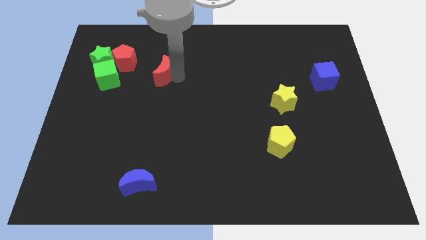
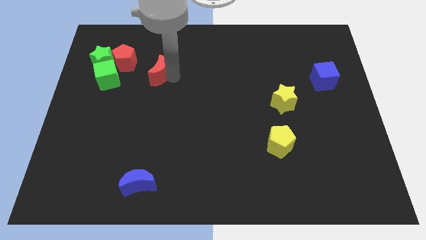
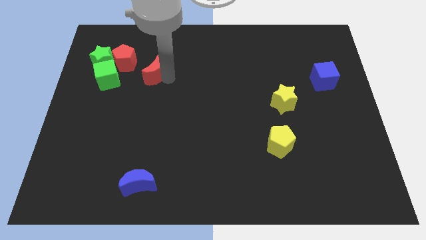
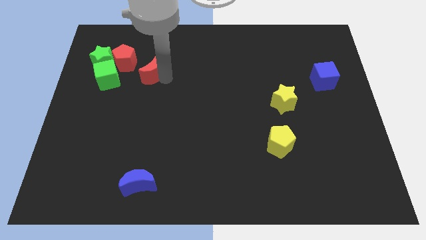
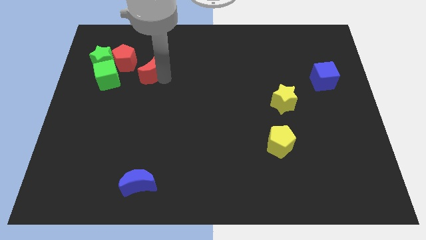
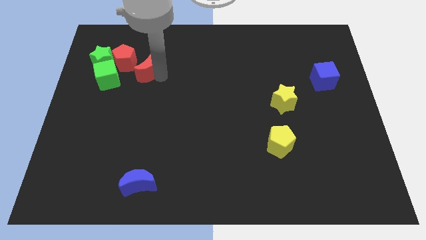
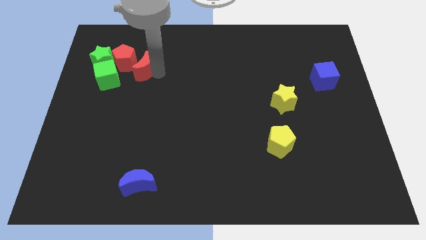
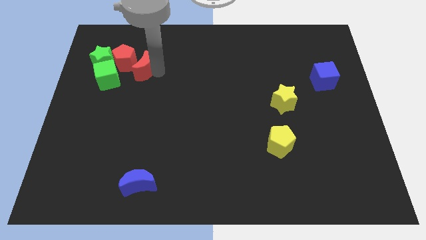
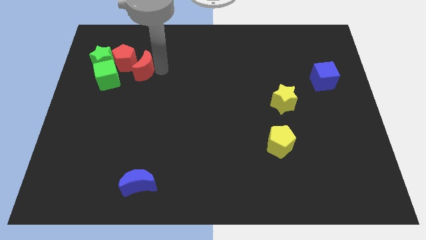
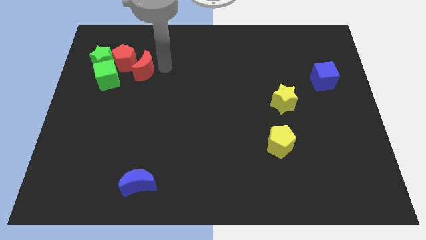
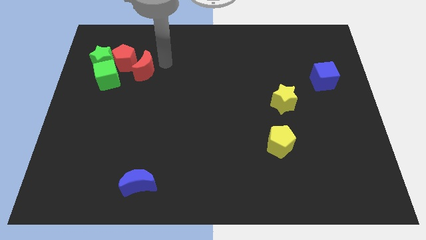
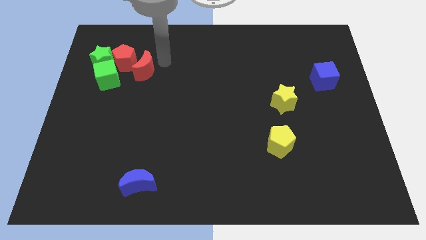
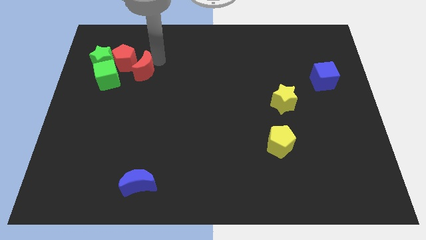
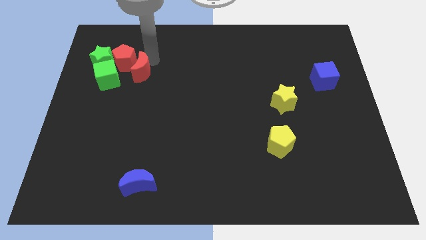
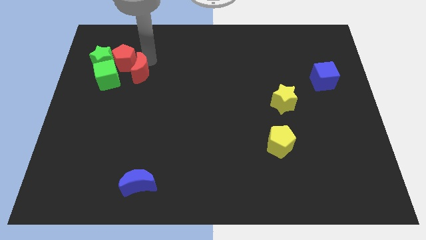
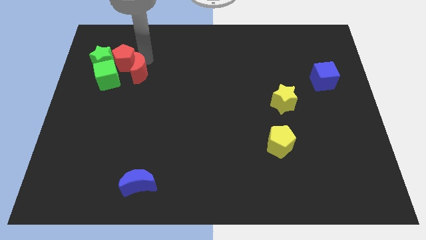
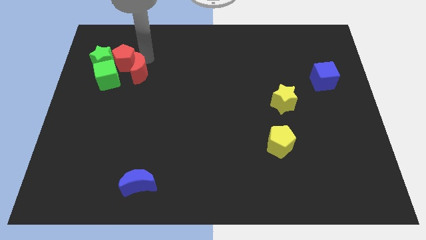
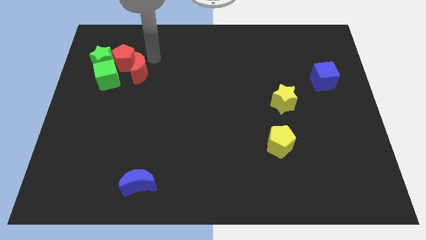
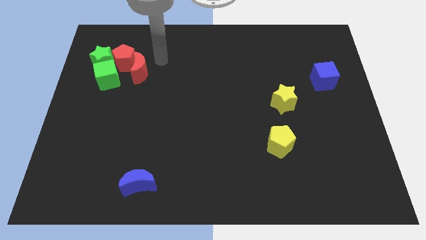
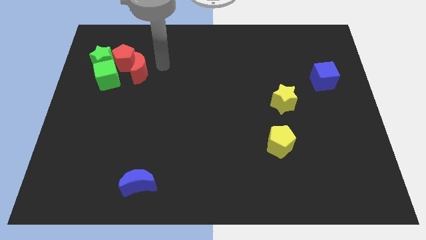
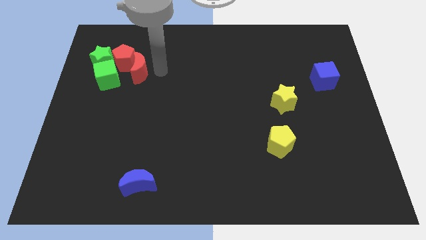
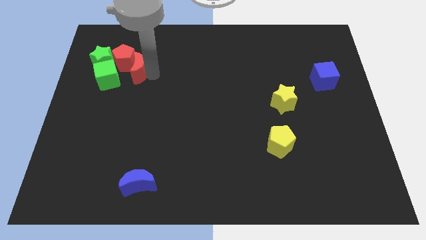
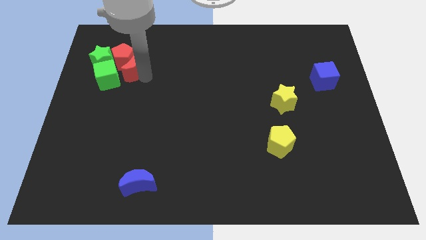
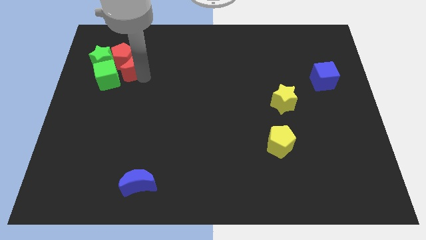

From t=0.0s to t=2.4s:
move the red crescent to the bottom of the red pentagon

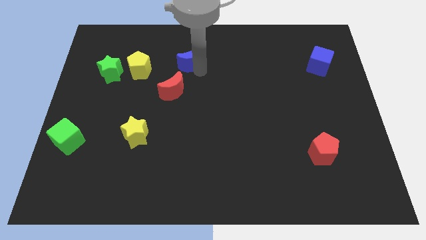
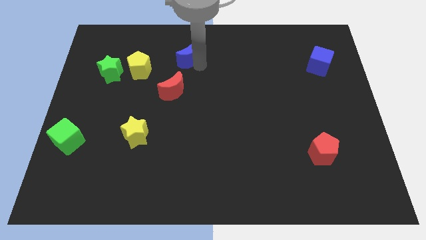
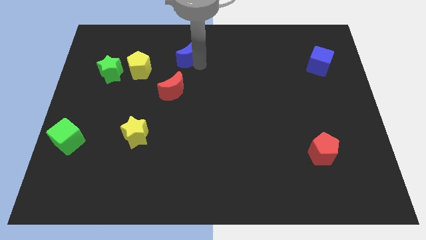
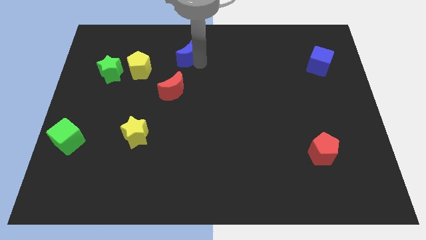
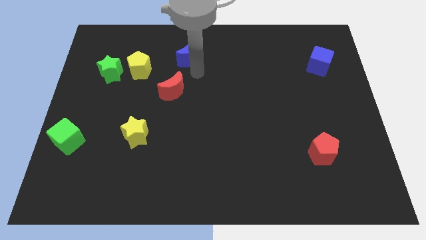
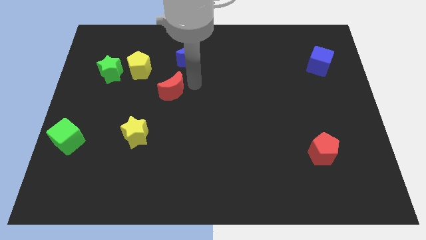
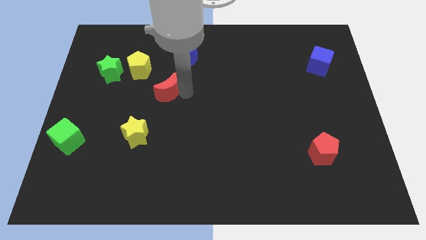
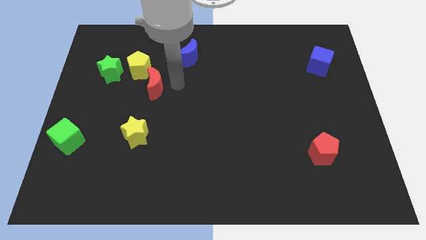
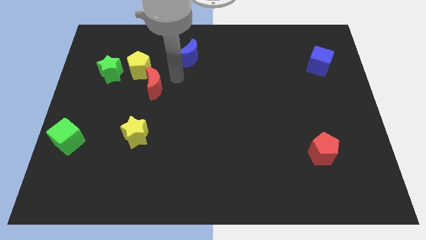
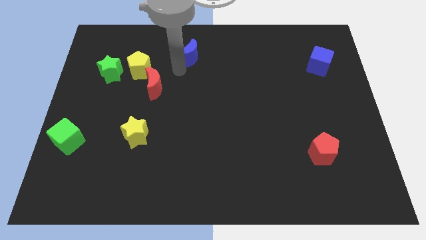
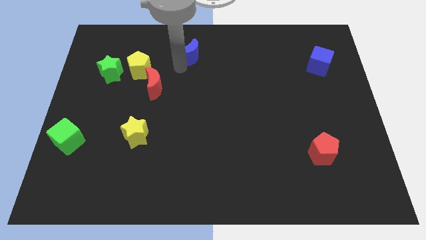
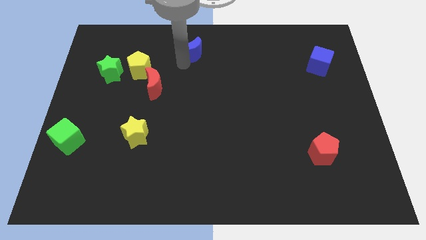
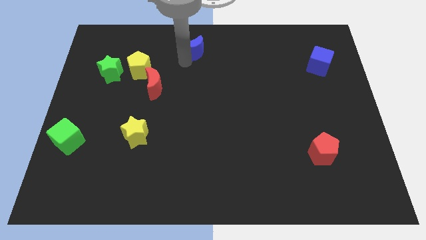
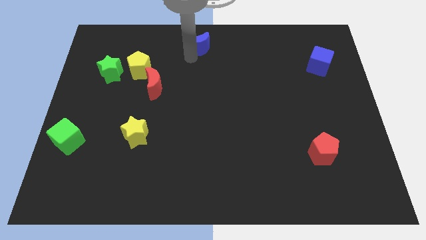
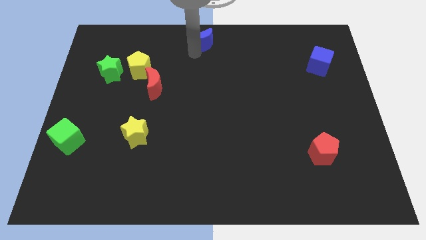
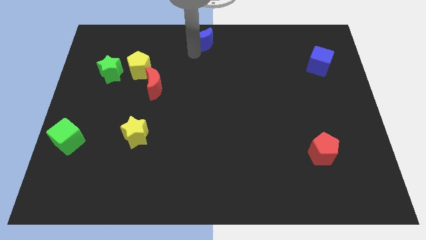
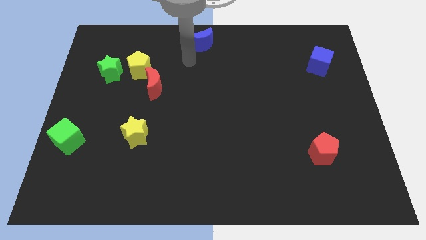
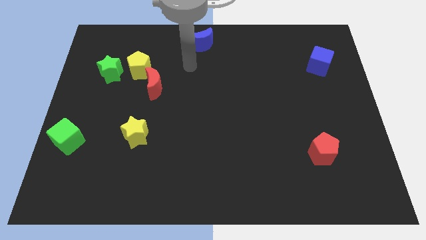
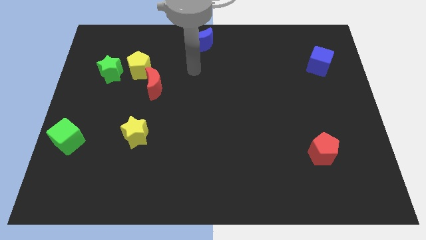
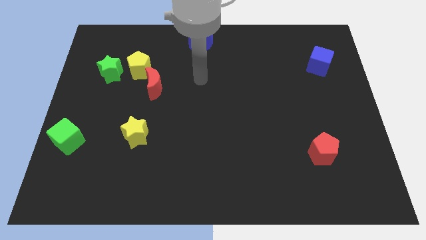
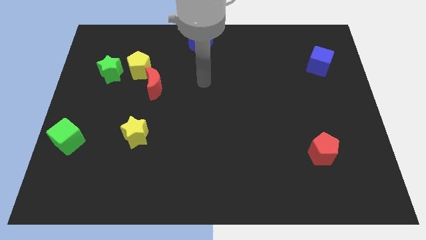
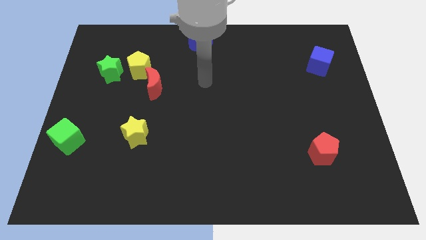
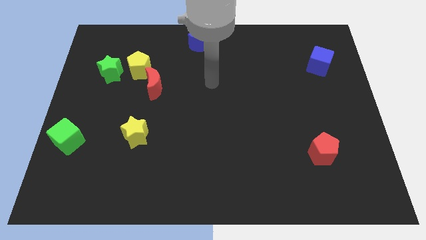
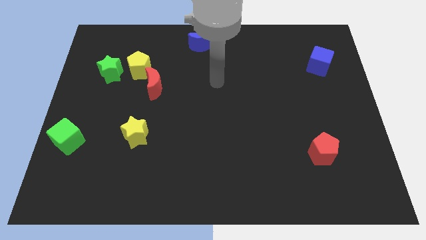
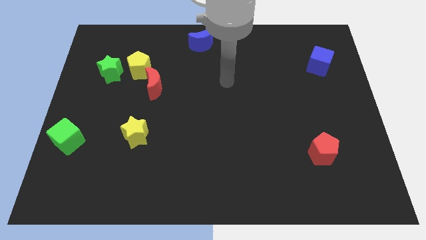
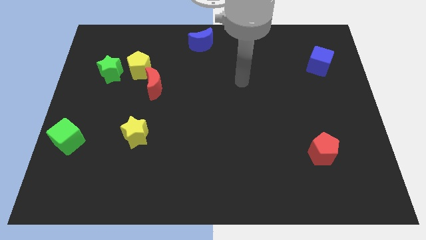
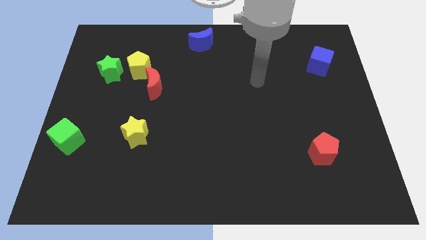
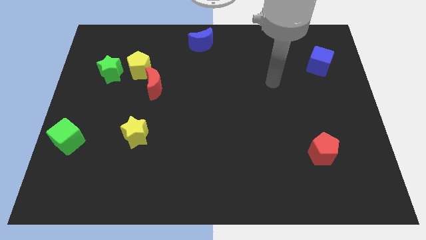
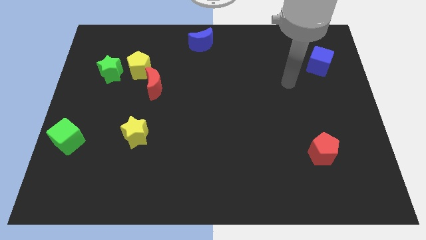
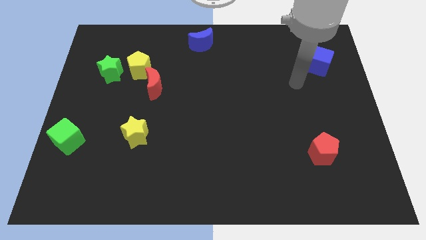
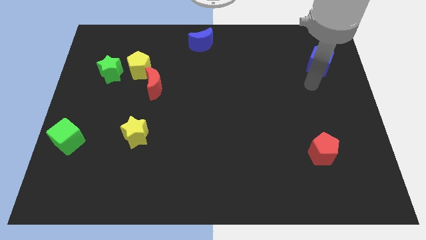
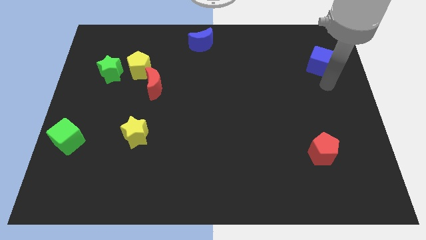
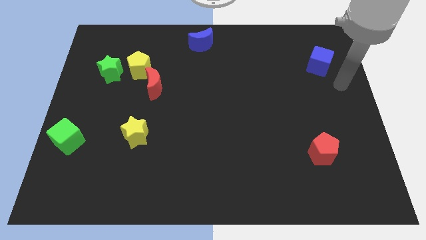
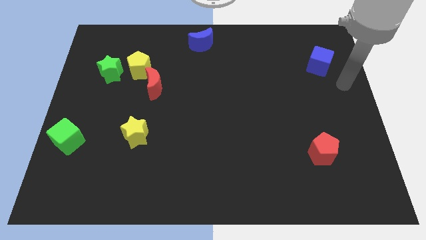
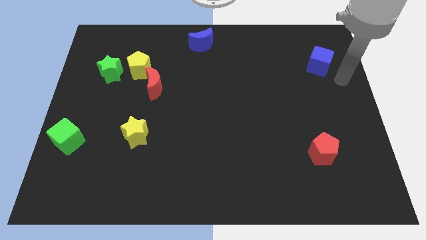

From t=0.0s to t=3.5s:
place blue moon to the top center of the board

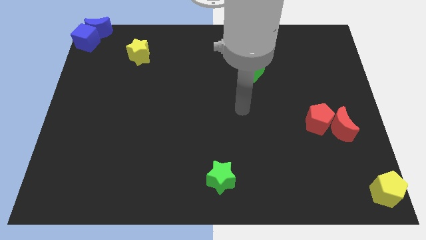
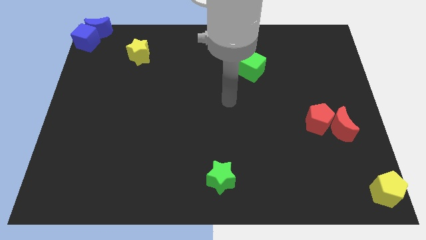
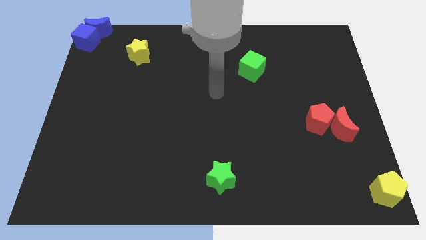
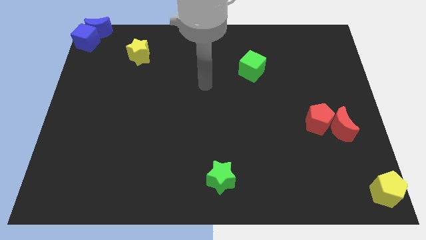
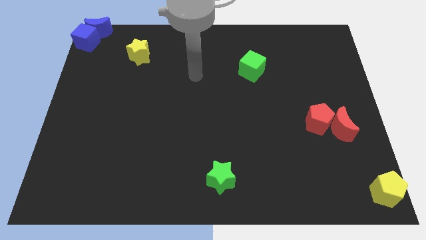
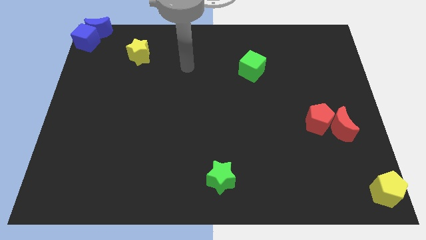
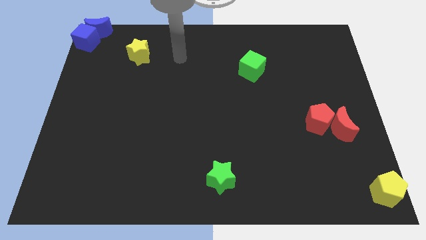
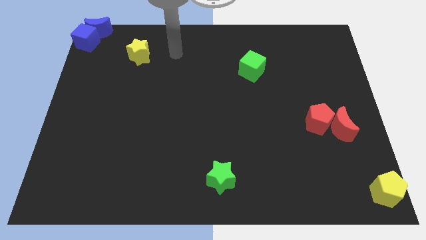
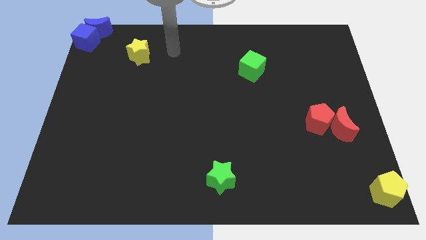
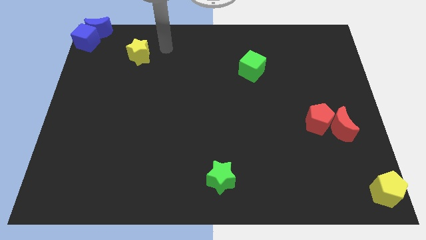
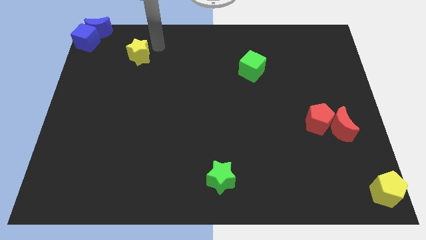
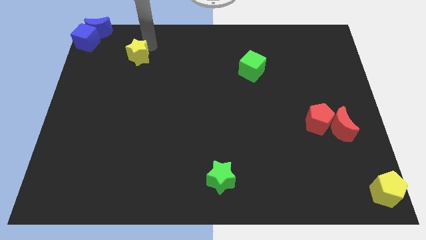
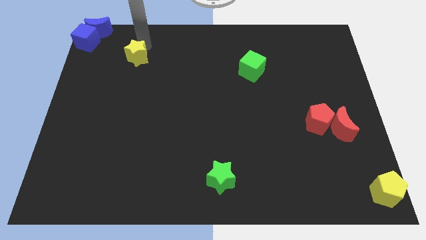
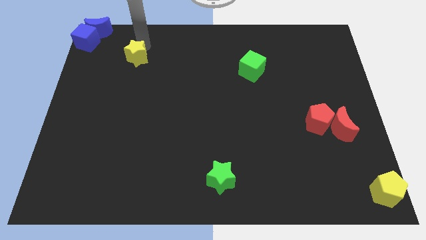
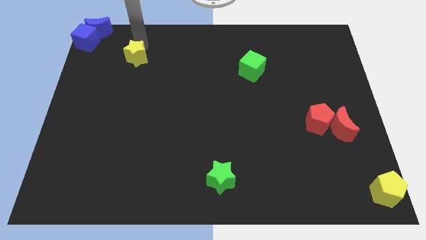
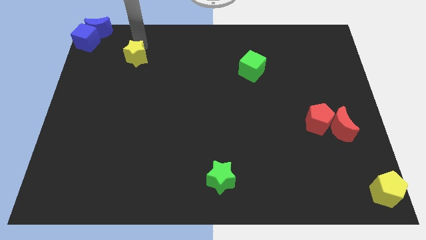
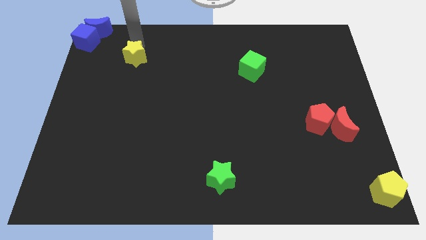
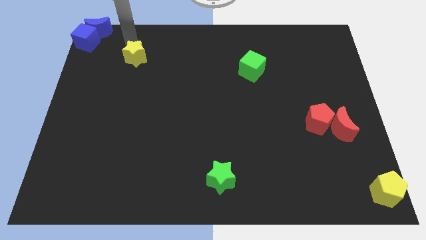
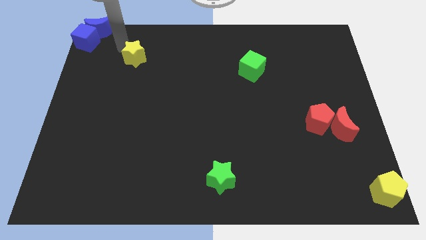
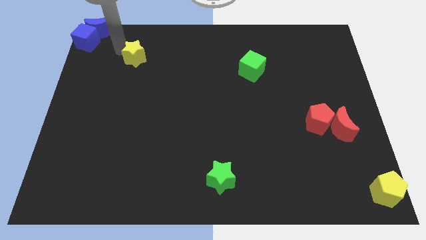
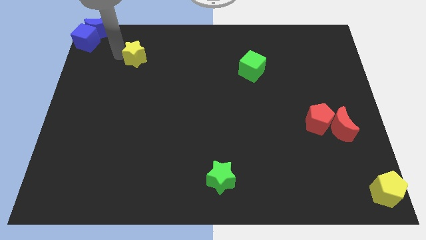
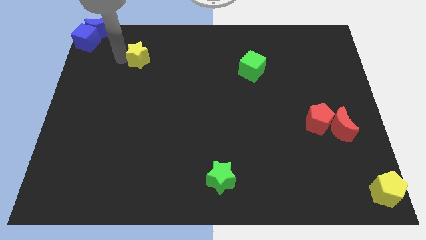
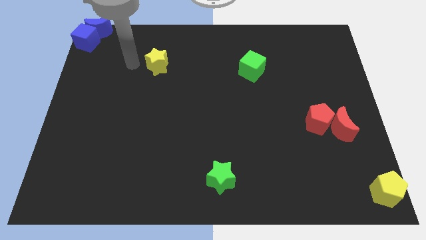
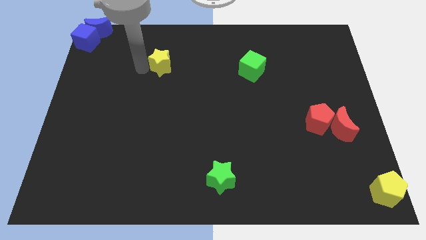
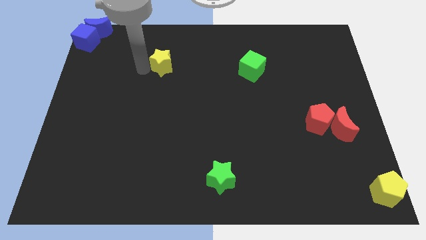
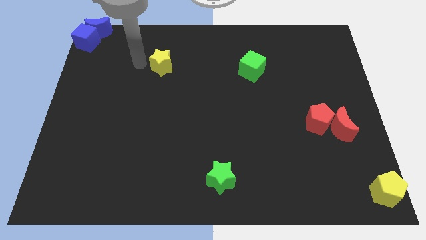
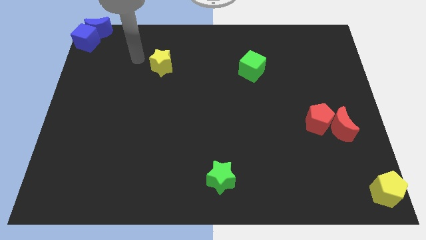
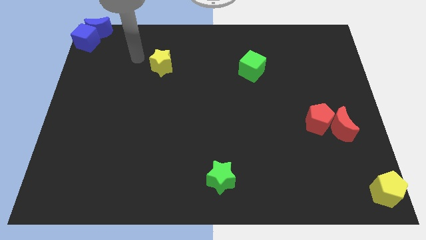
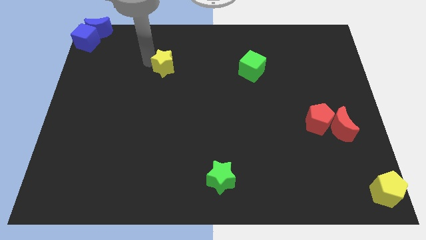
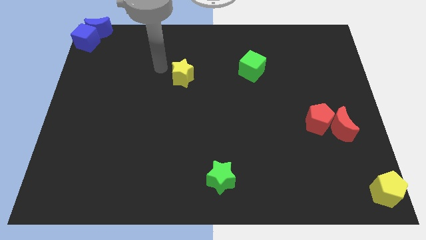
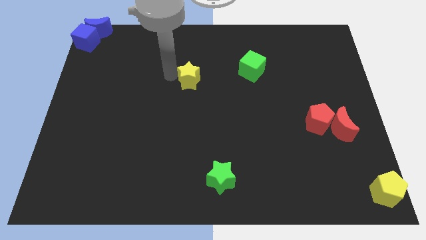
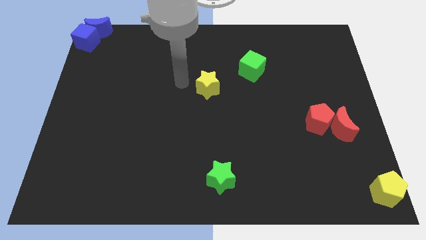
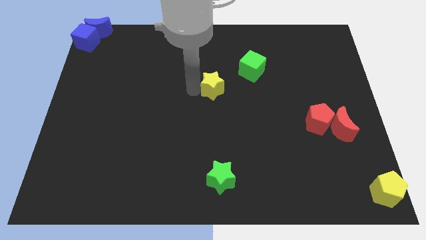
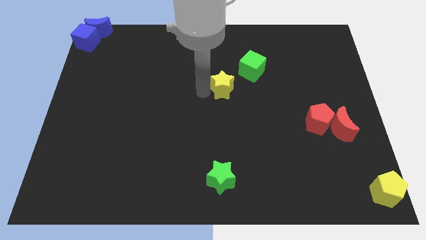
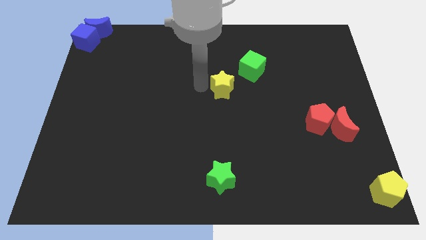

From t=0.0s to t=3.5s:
slide the yellow star diagonally bottom left to the green cube
